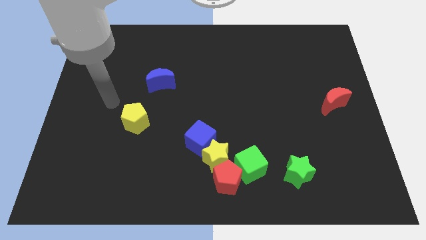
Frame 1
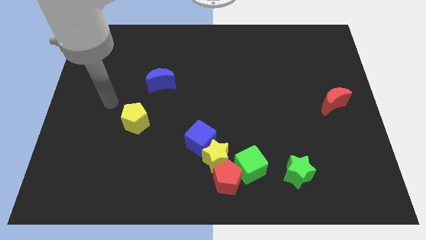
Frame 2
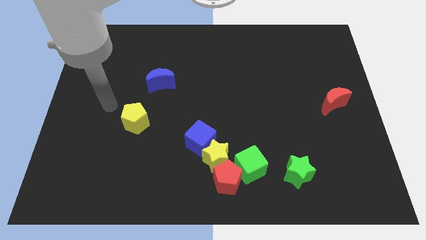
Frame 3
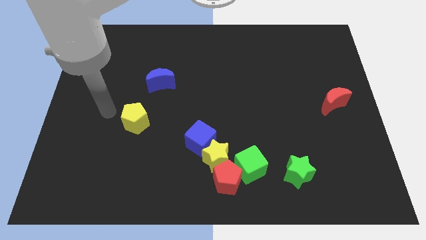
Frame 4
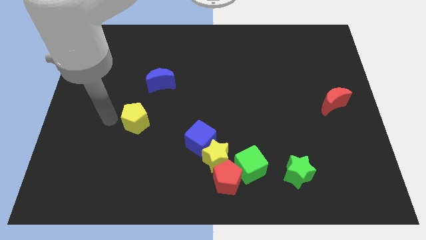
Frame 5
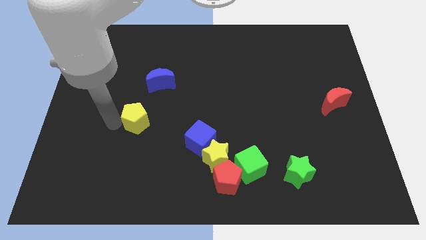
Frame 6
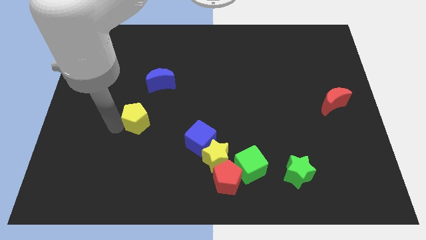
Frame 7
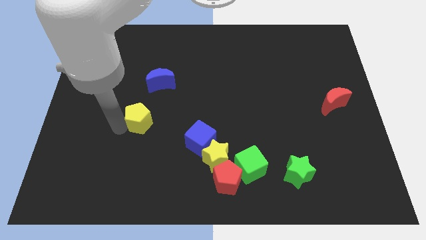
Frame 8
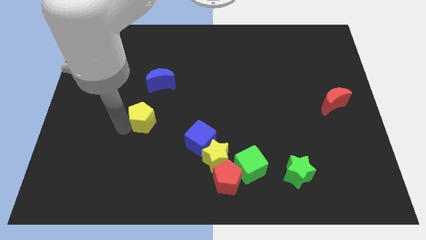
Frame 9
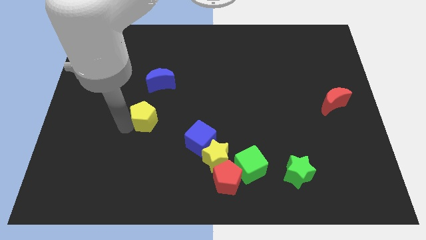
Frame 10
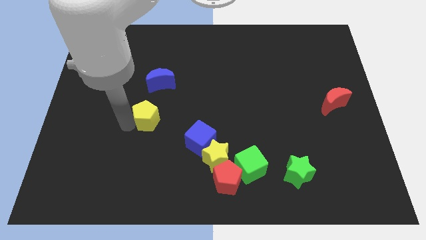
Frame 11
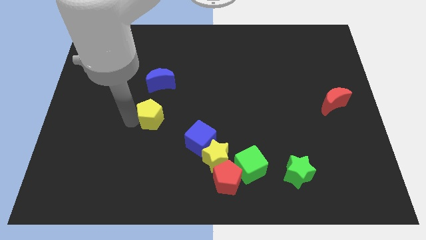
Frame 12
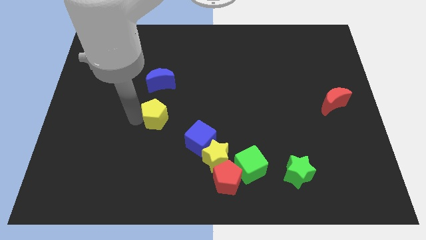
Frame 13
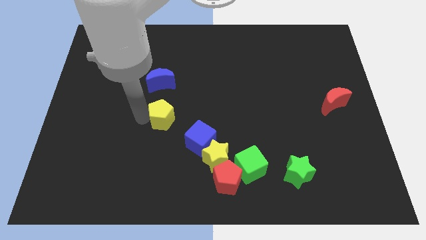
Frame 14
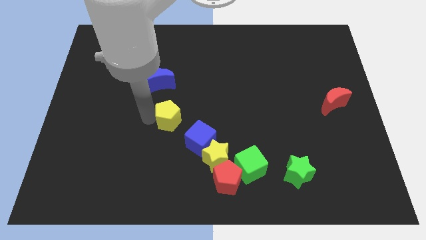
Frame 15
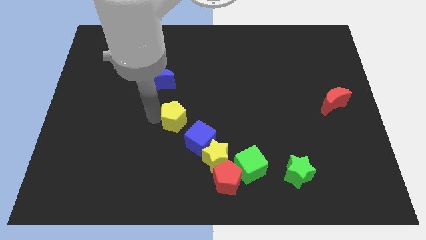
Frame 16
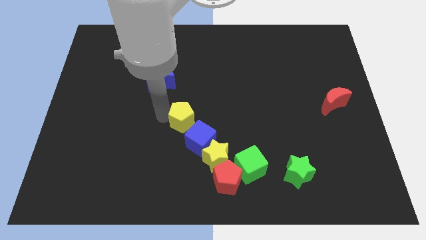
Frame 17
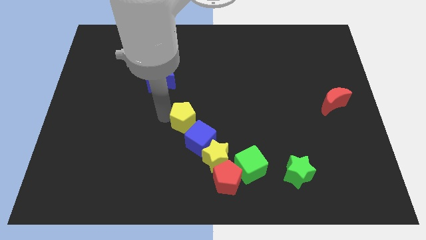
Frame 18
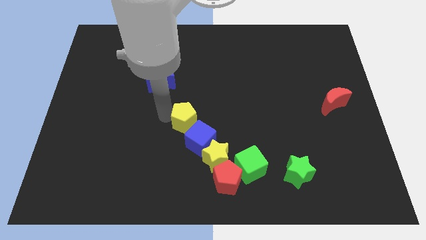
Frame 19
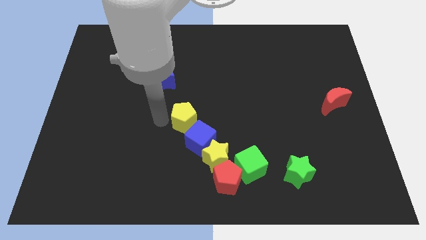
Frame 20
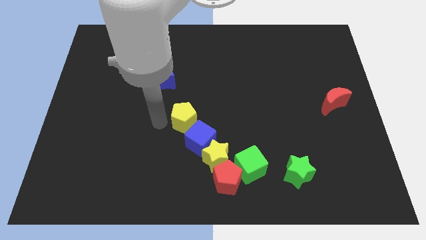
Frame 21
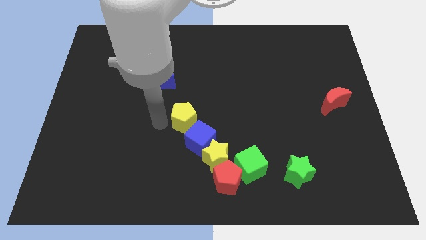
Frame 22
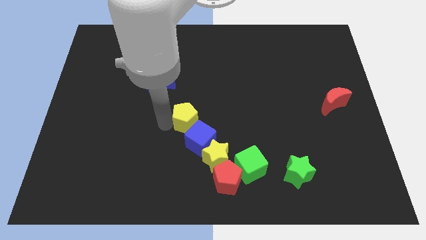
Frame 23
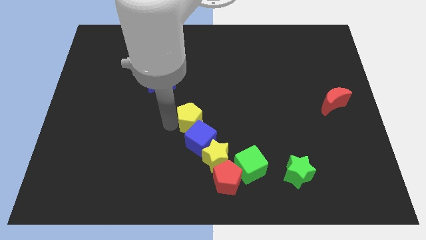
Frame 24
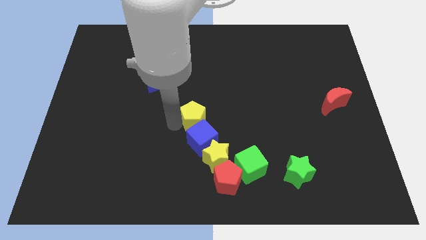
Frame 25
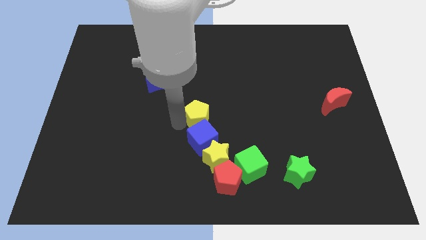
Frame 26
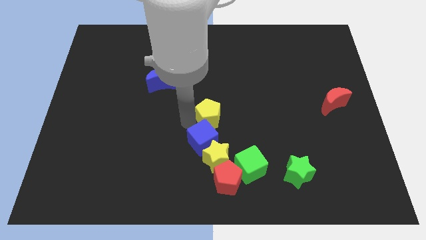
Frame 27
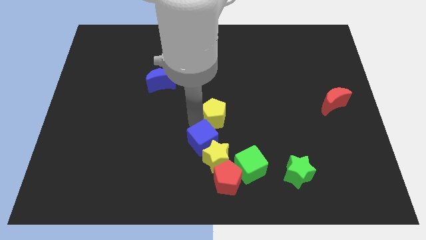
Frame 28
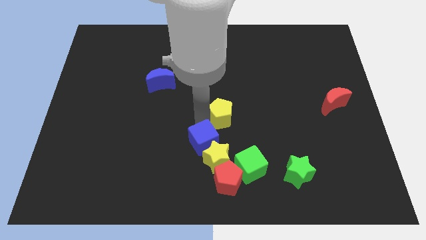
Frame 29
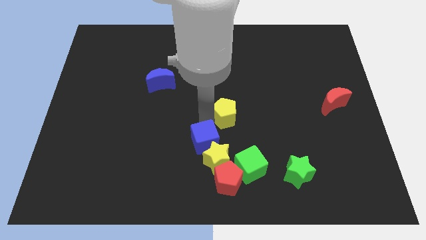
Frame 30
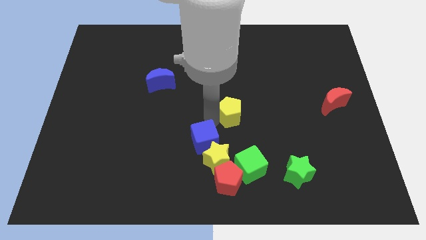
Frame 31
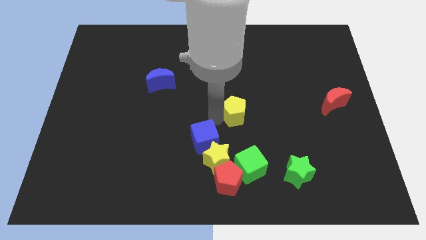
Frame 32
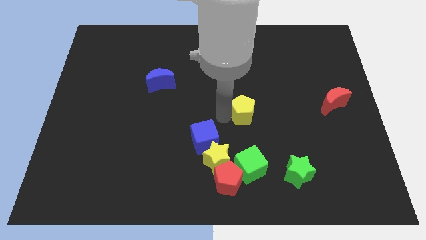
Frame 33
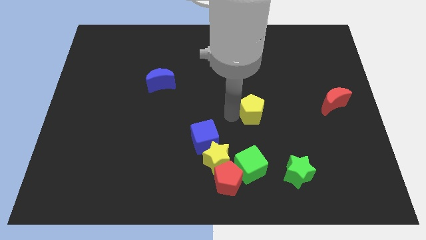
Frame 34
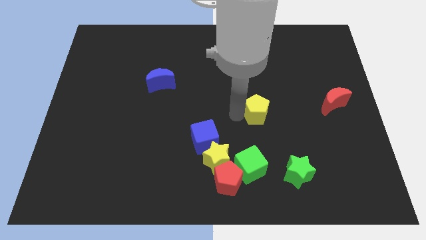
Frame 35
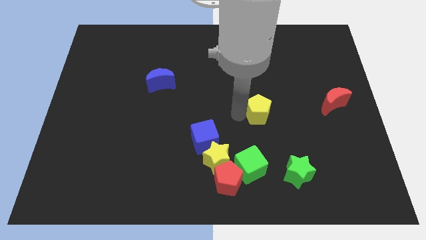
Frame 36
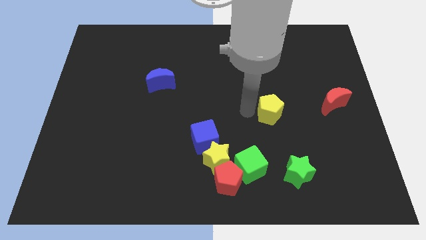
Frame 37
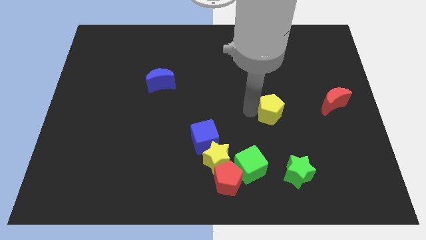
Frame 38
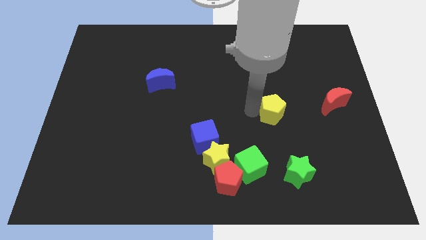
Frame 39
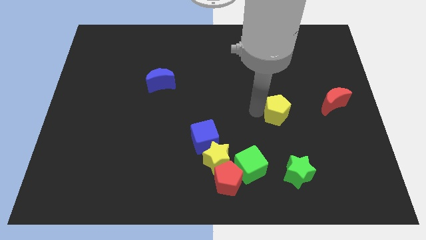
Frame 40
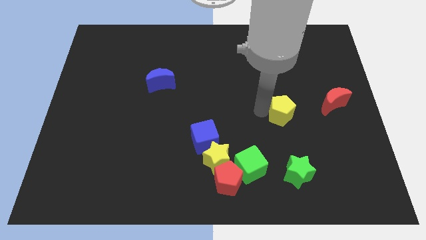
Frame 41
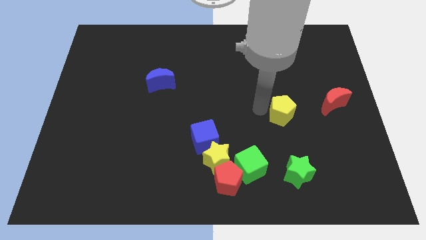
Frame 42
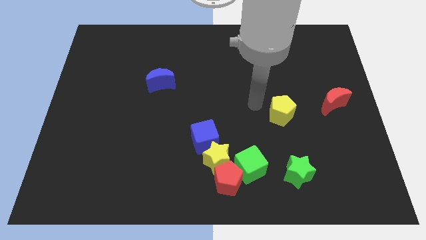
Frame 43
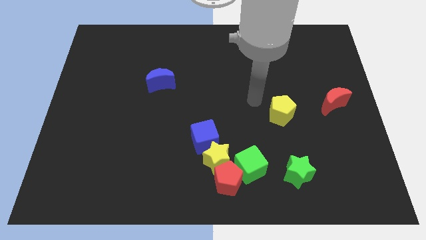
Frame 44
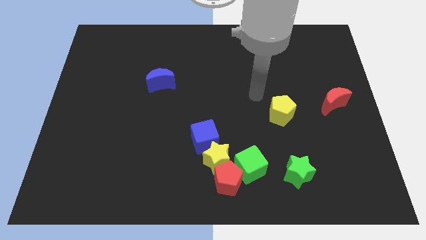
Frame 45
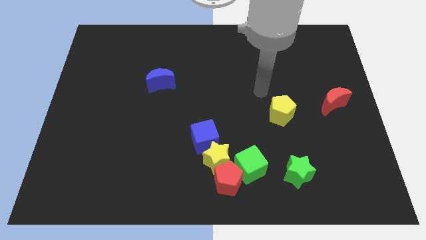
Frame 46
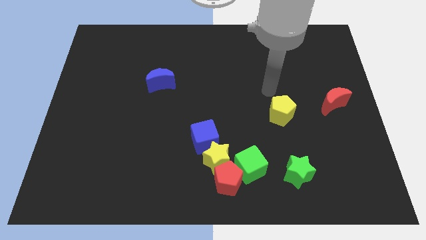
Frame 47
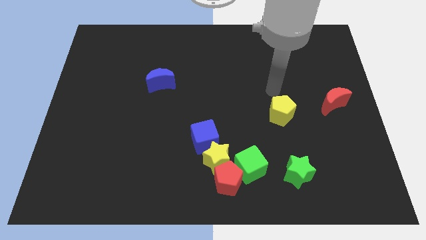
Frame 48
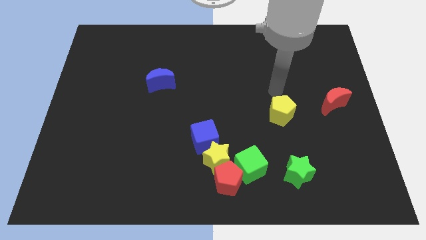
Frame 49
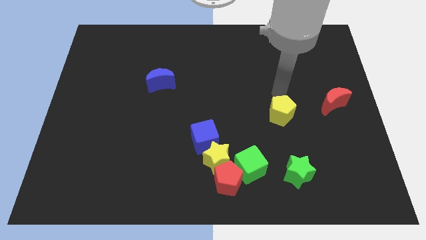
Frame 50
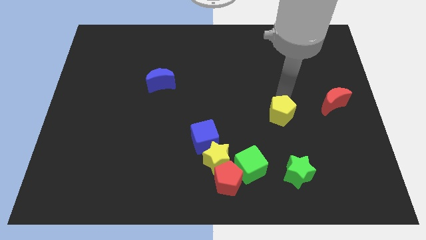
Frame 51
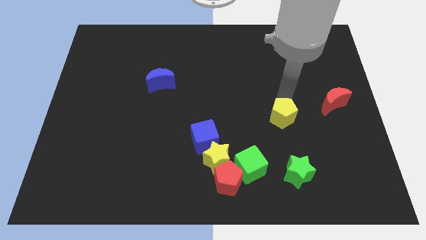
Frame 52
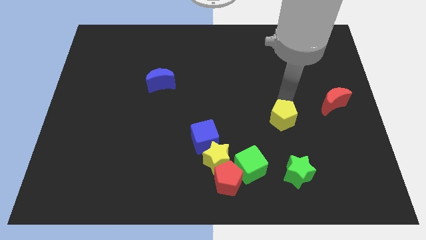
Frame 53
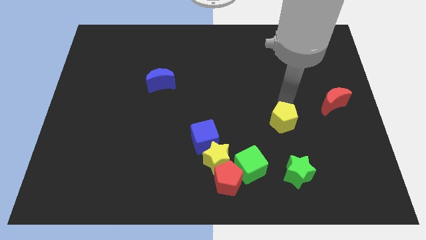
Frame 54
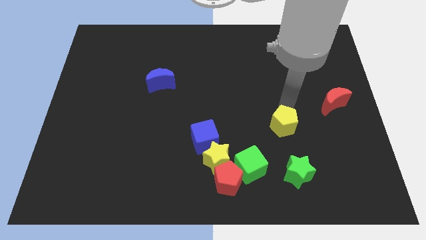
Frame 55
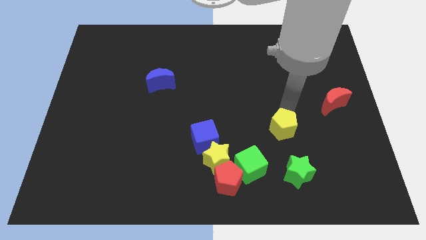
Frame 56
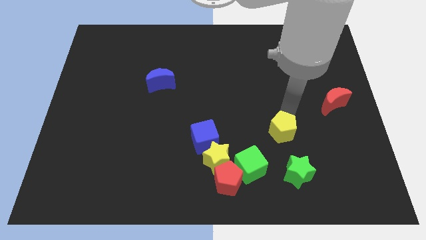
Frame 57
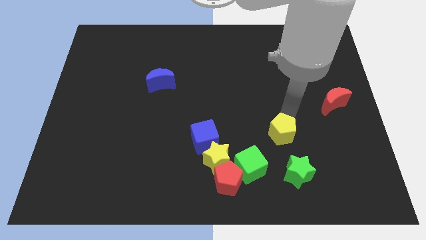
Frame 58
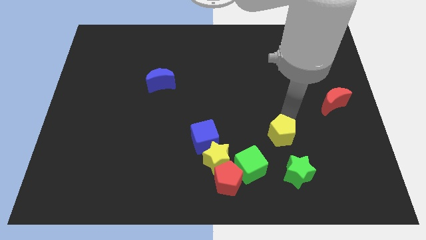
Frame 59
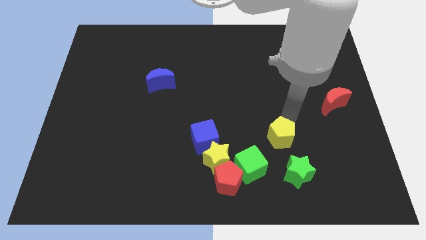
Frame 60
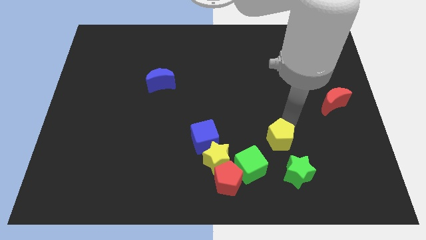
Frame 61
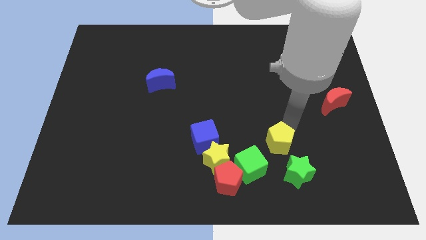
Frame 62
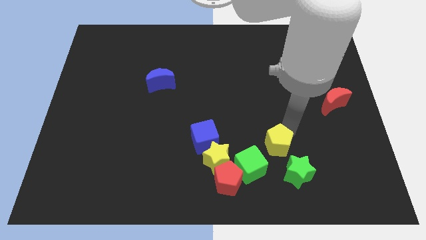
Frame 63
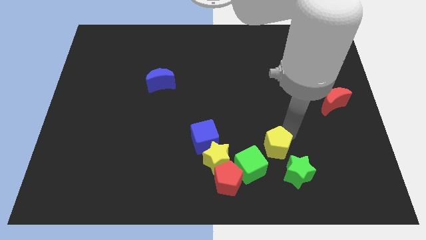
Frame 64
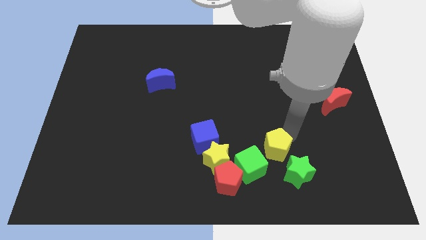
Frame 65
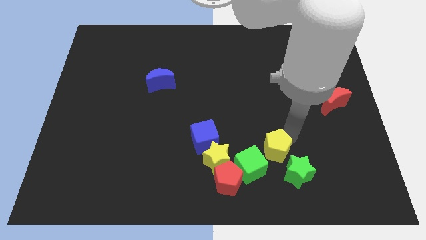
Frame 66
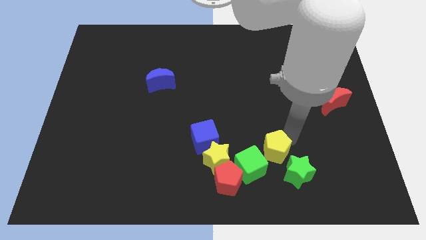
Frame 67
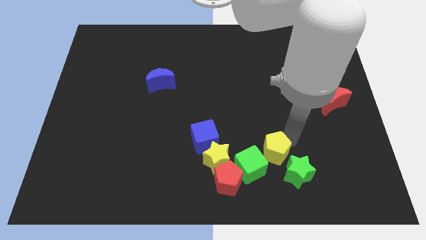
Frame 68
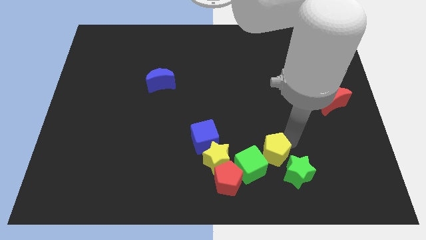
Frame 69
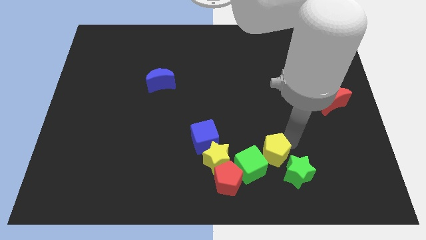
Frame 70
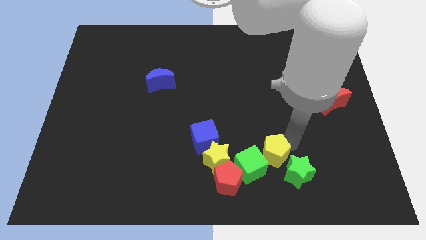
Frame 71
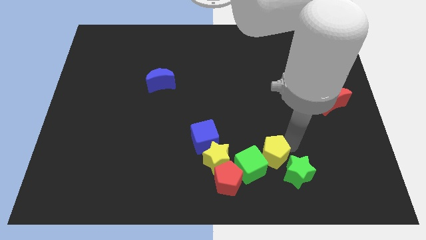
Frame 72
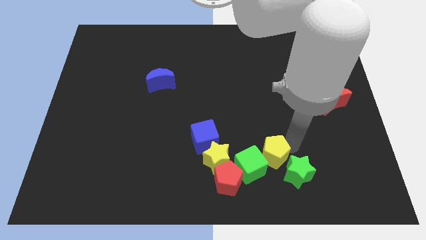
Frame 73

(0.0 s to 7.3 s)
put the yellow pentagon next to the green star

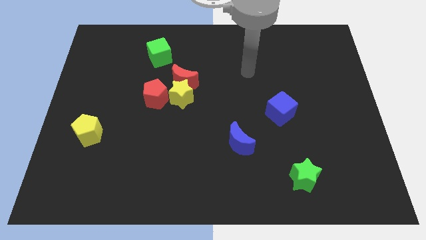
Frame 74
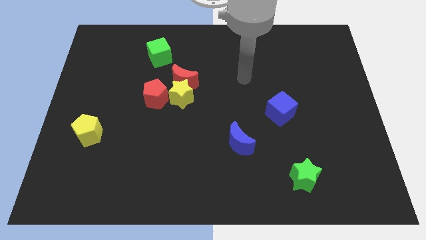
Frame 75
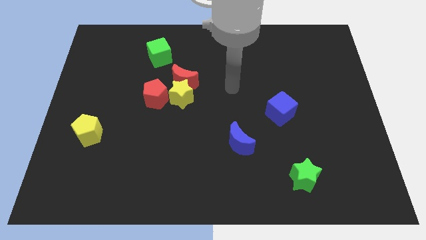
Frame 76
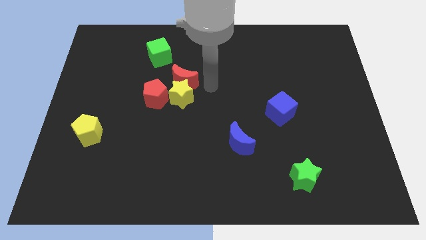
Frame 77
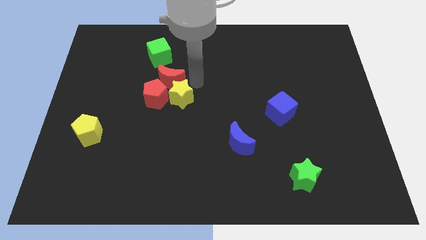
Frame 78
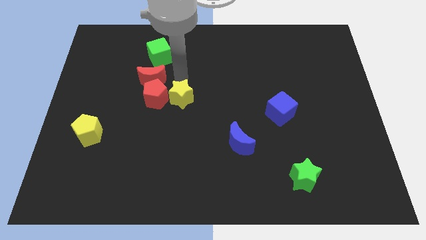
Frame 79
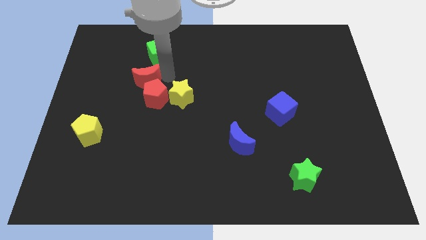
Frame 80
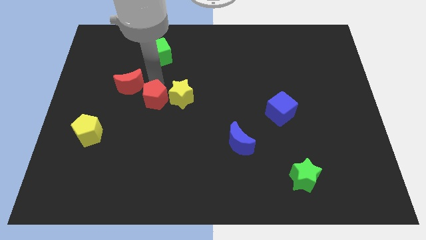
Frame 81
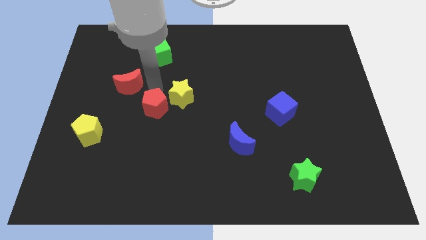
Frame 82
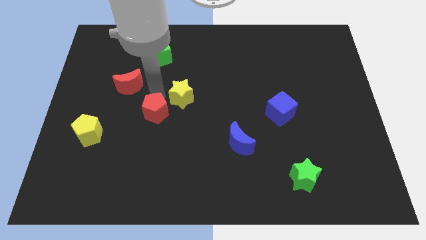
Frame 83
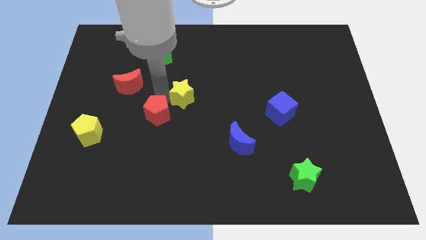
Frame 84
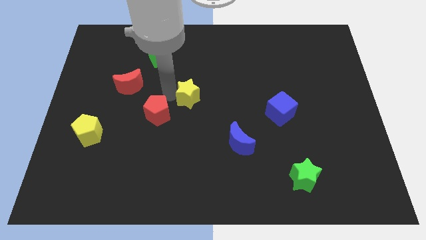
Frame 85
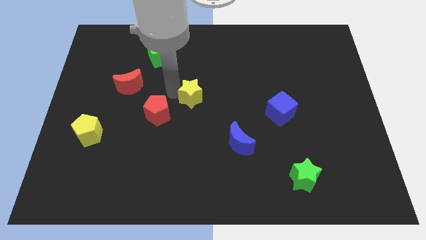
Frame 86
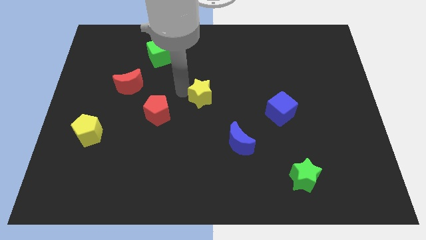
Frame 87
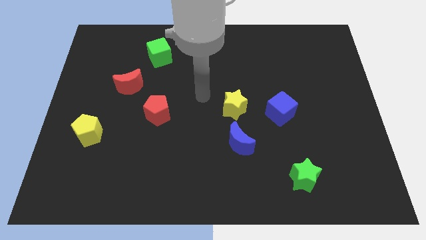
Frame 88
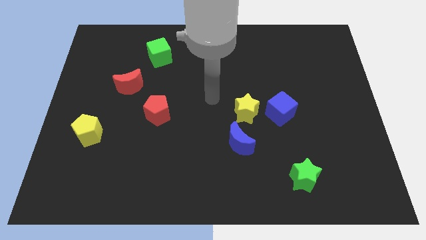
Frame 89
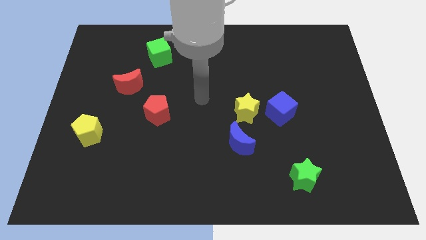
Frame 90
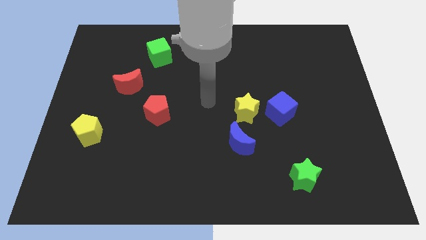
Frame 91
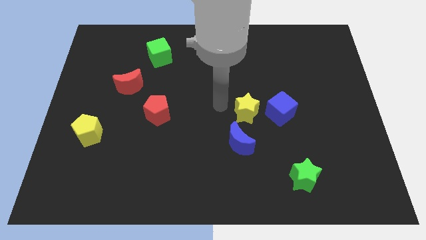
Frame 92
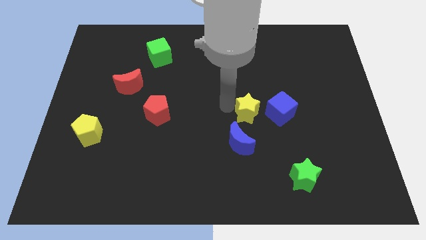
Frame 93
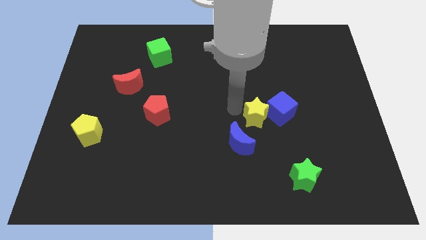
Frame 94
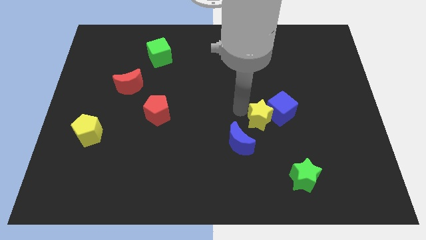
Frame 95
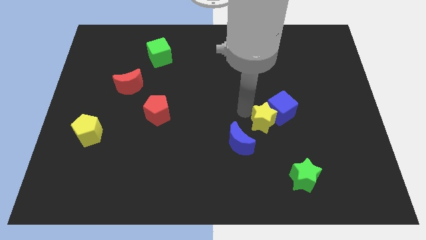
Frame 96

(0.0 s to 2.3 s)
slide the yellow star next to the blue cube
